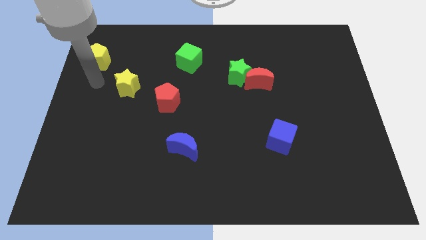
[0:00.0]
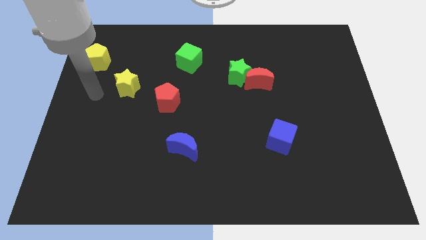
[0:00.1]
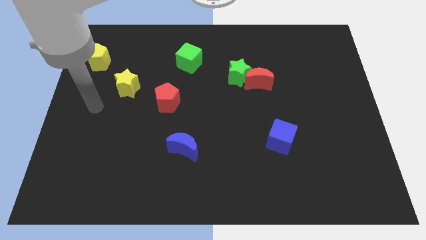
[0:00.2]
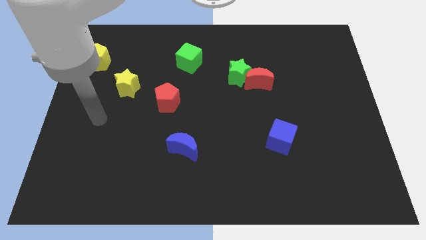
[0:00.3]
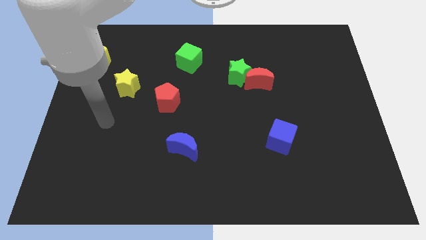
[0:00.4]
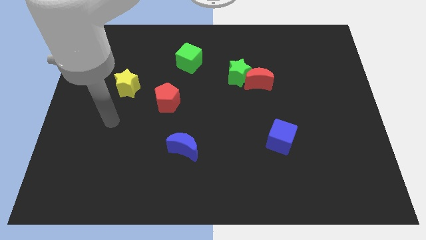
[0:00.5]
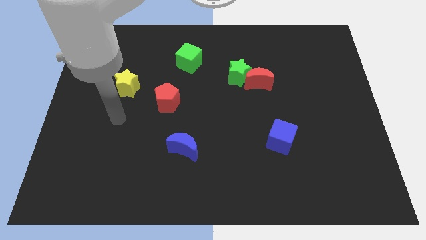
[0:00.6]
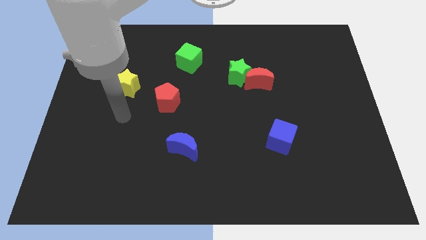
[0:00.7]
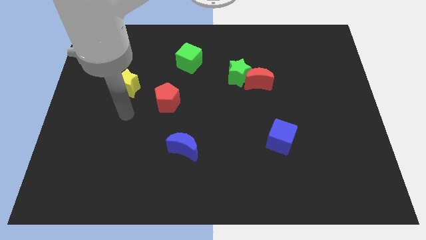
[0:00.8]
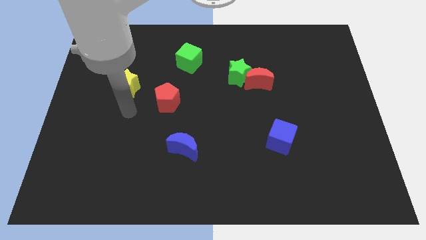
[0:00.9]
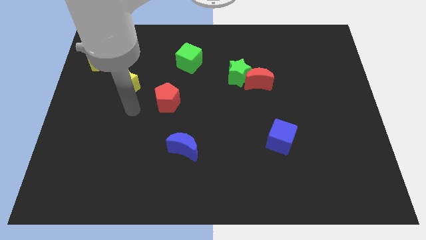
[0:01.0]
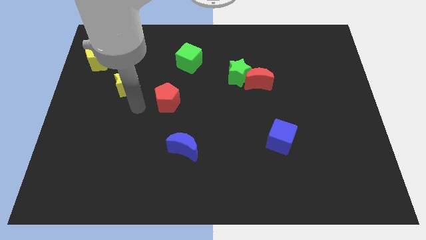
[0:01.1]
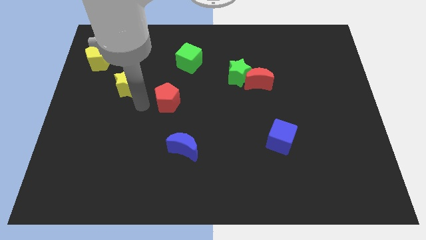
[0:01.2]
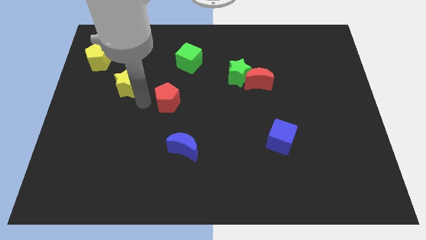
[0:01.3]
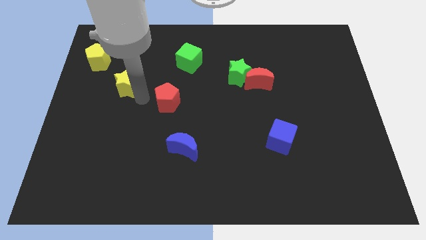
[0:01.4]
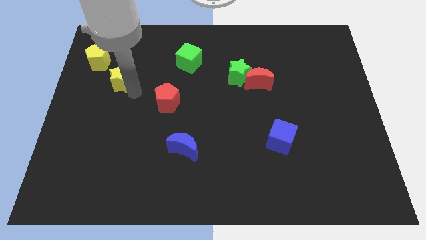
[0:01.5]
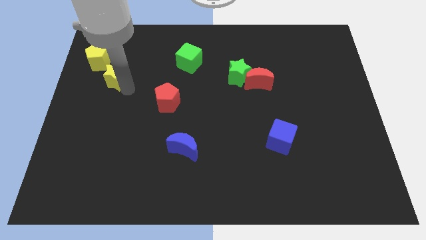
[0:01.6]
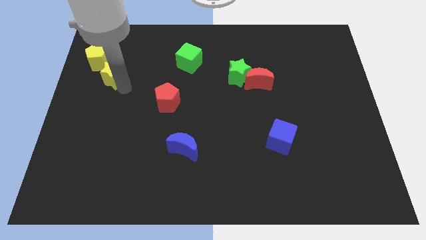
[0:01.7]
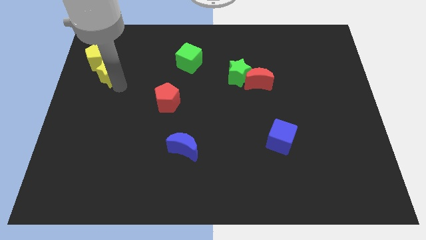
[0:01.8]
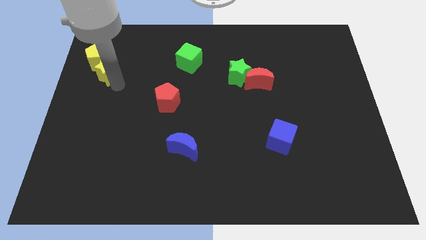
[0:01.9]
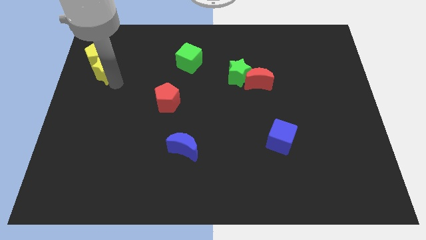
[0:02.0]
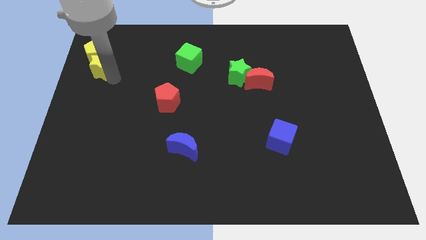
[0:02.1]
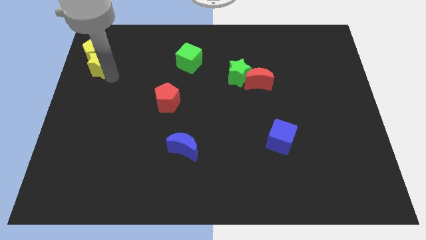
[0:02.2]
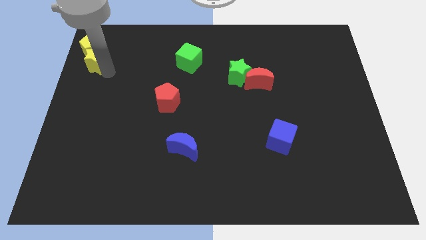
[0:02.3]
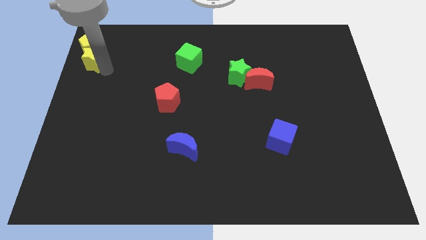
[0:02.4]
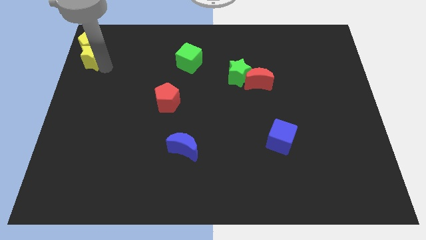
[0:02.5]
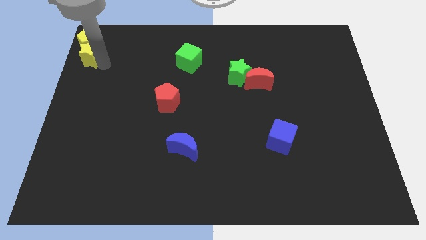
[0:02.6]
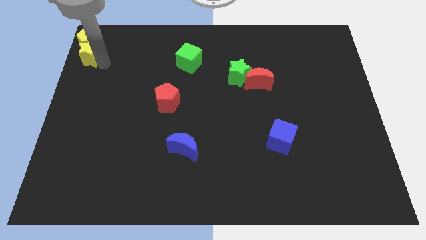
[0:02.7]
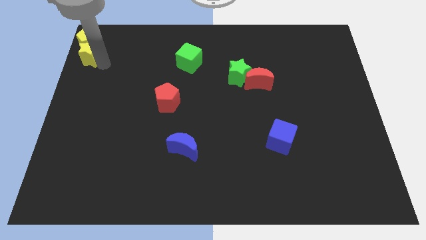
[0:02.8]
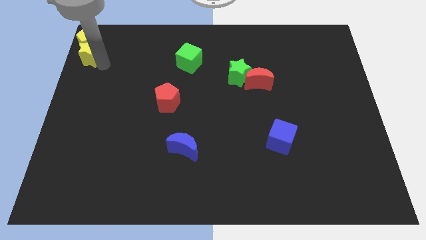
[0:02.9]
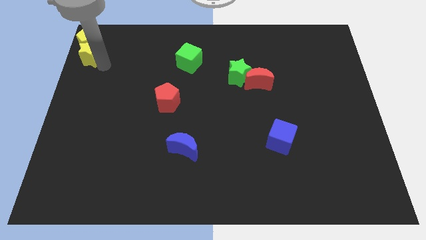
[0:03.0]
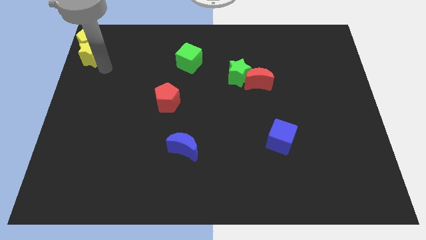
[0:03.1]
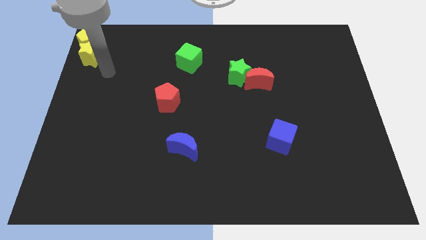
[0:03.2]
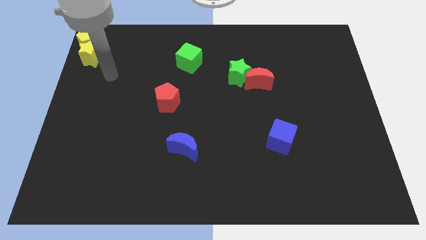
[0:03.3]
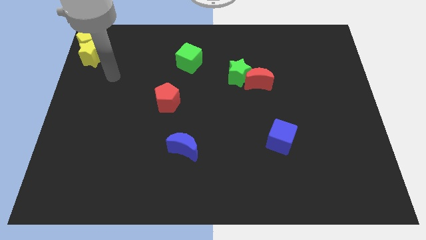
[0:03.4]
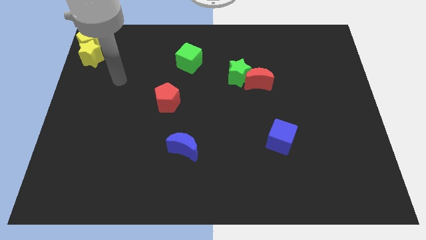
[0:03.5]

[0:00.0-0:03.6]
push the yellow blocks to the top left corner of the board

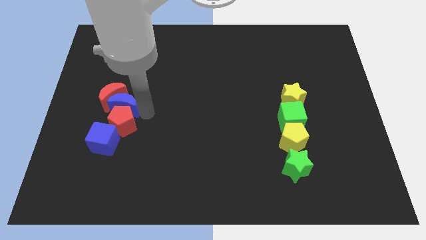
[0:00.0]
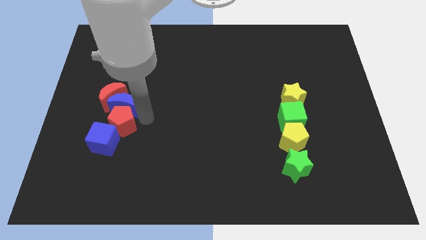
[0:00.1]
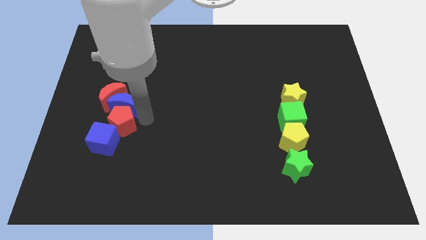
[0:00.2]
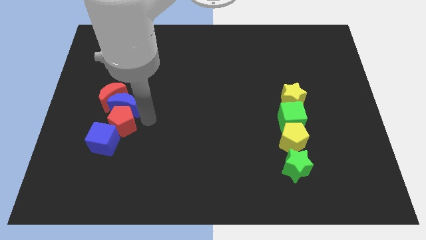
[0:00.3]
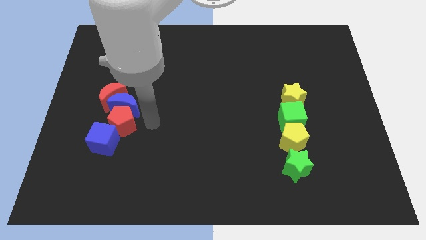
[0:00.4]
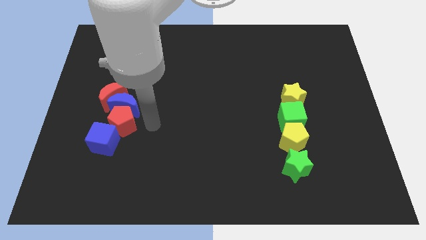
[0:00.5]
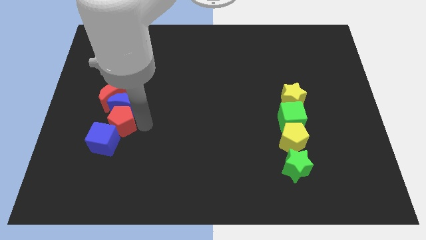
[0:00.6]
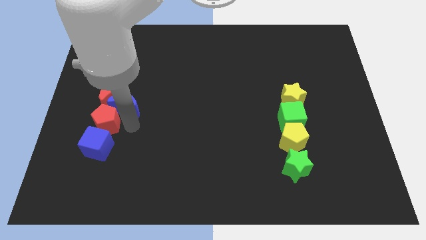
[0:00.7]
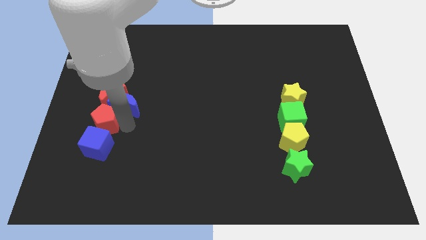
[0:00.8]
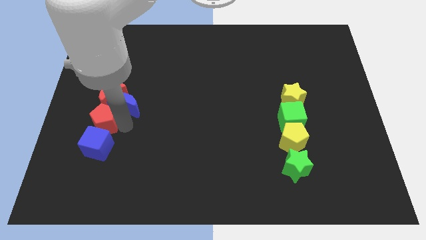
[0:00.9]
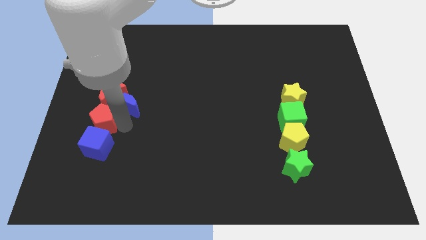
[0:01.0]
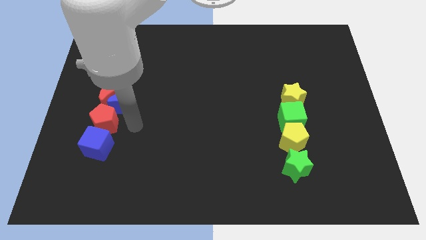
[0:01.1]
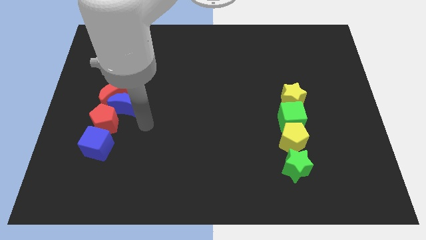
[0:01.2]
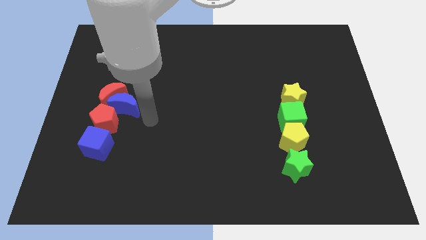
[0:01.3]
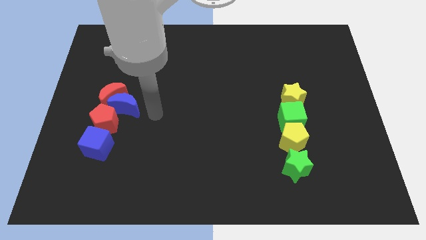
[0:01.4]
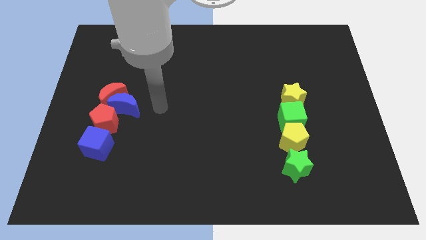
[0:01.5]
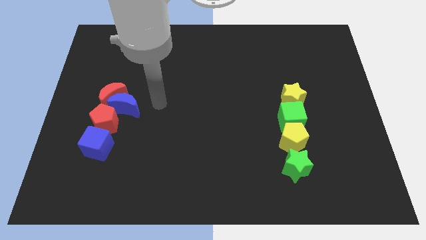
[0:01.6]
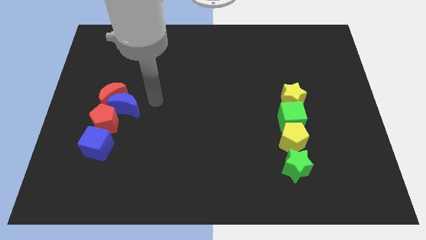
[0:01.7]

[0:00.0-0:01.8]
move the red pentagon to the top of the blue cube

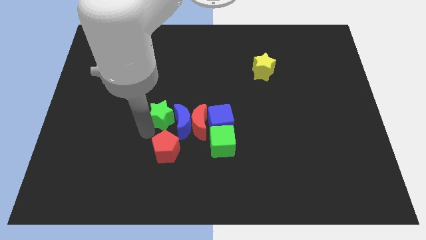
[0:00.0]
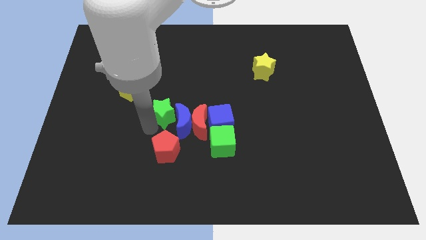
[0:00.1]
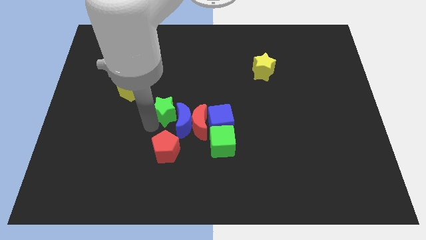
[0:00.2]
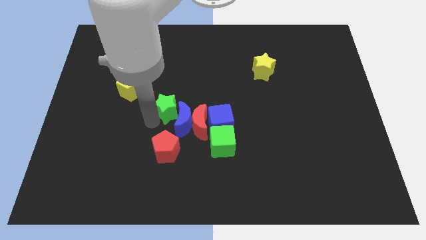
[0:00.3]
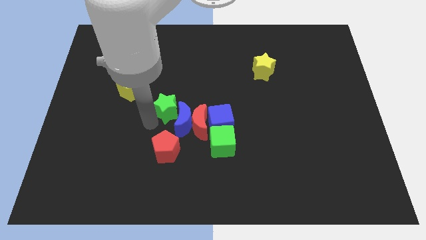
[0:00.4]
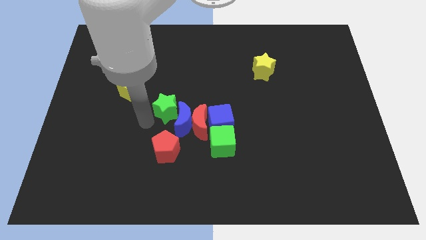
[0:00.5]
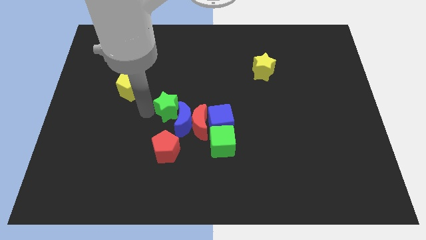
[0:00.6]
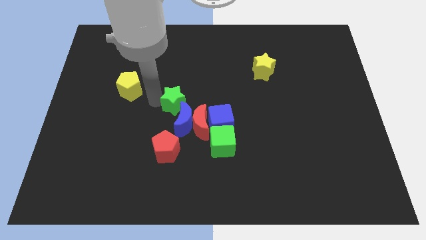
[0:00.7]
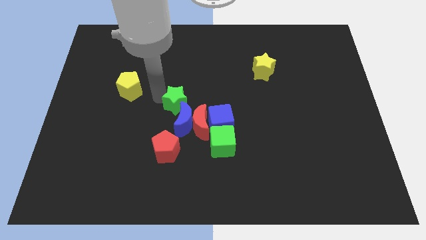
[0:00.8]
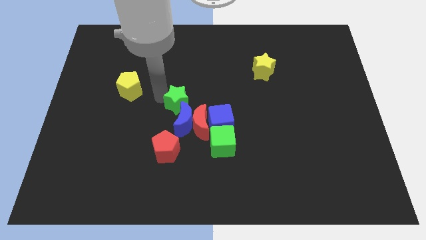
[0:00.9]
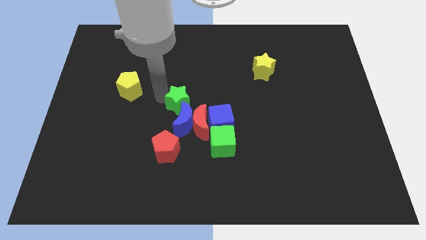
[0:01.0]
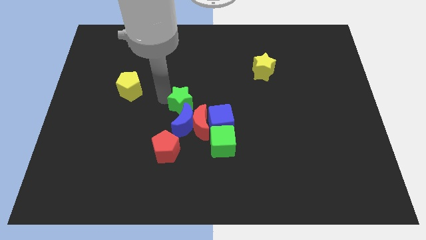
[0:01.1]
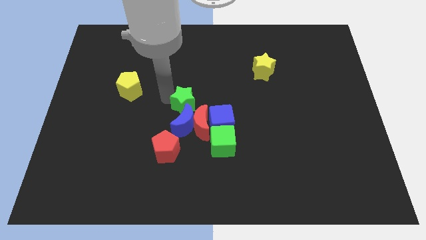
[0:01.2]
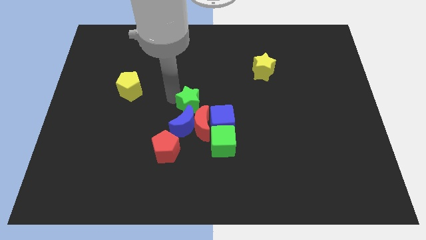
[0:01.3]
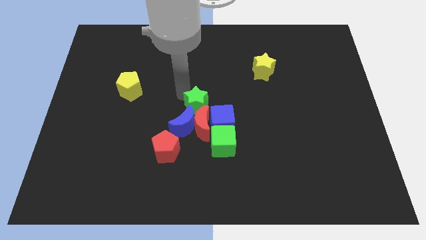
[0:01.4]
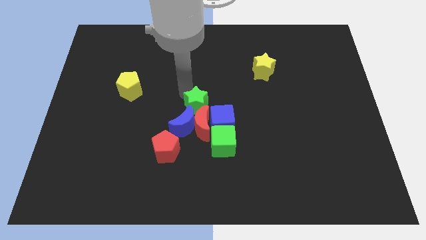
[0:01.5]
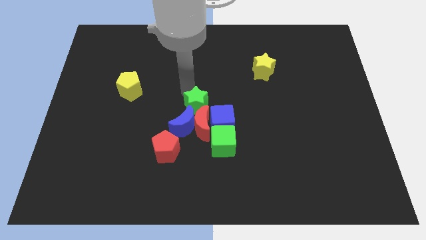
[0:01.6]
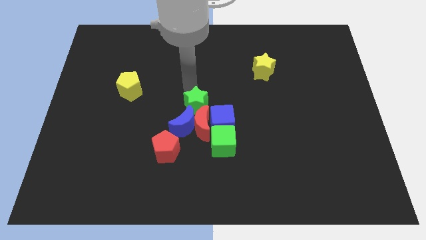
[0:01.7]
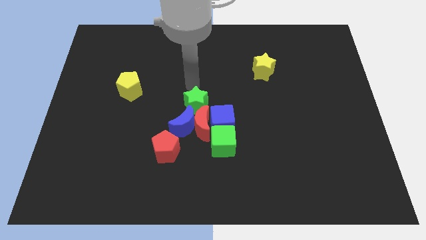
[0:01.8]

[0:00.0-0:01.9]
place the green star to the center of the board

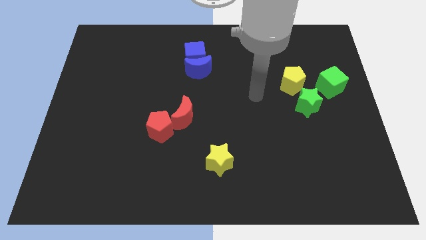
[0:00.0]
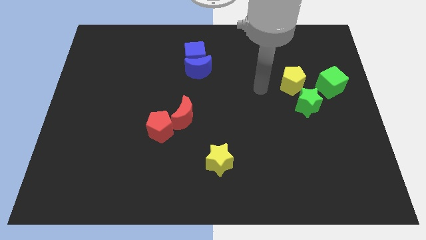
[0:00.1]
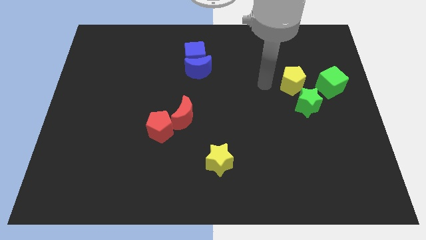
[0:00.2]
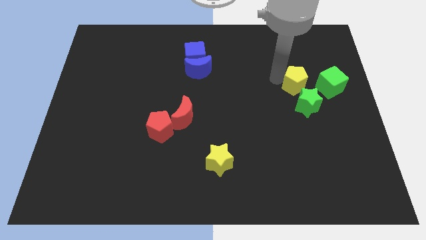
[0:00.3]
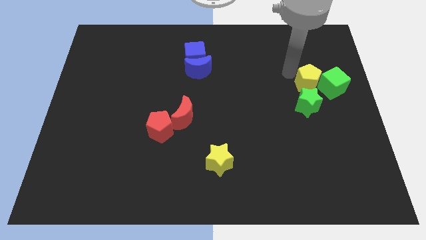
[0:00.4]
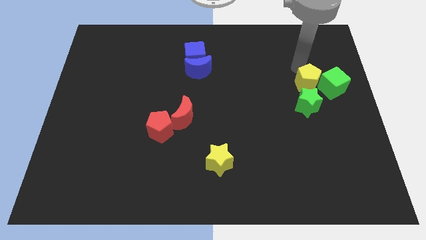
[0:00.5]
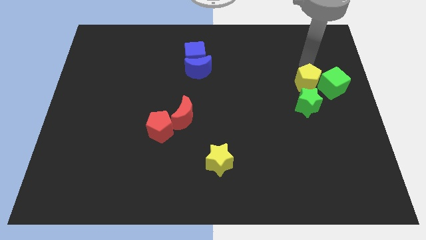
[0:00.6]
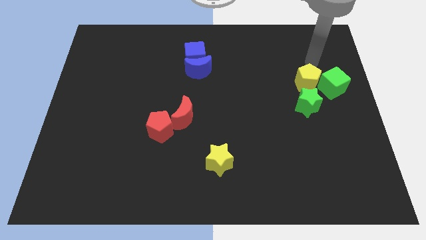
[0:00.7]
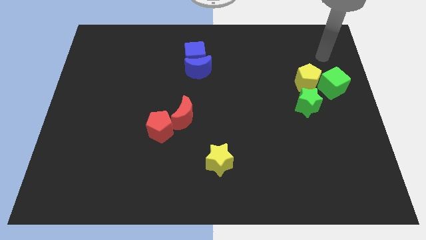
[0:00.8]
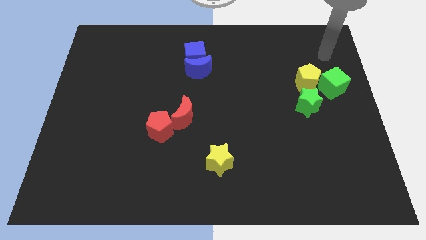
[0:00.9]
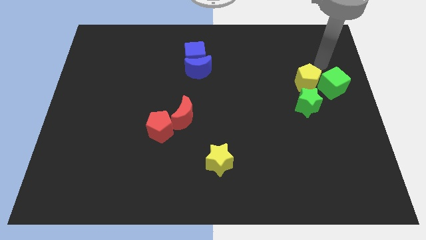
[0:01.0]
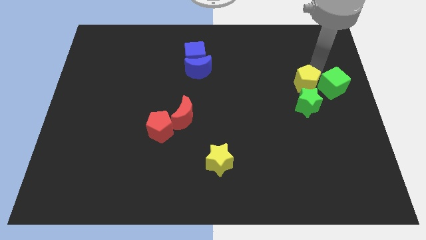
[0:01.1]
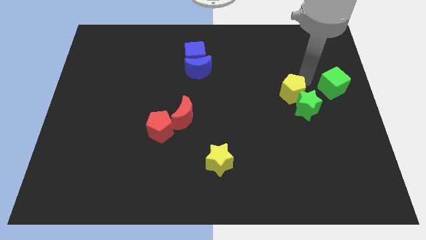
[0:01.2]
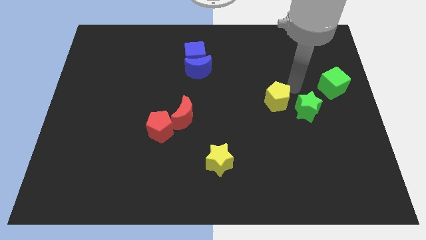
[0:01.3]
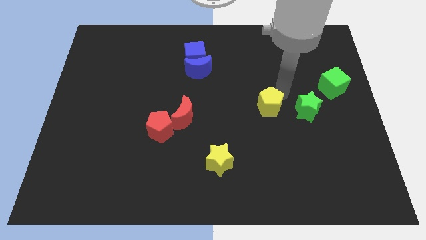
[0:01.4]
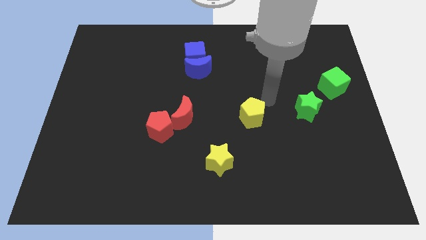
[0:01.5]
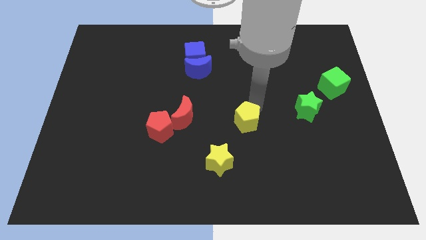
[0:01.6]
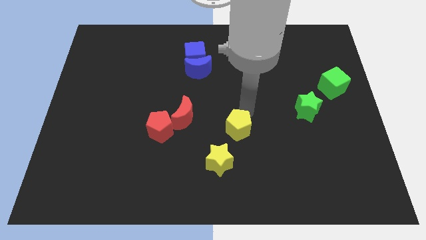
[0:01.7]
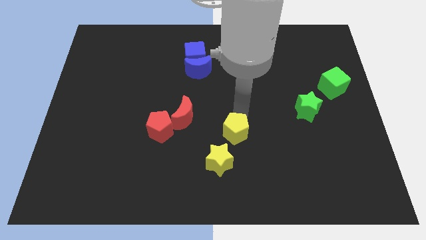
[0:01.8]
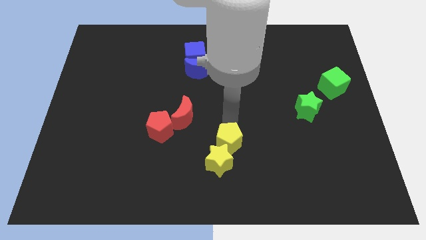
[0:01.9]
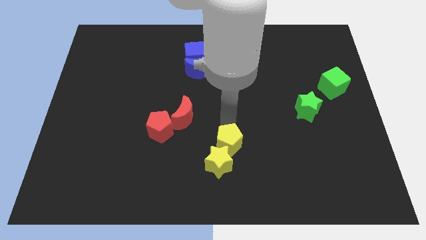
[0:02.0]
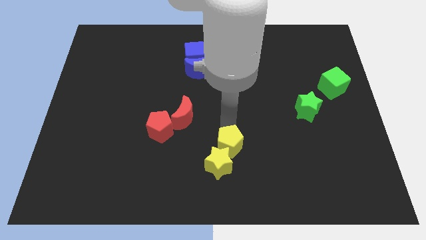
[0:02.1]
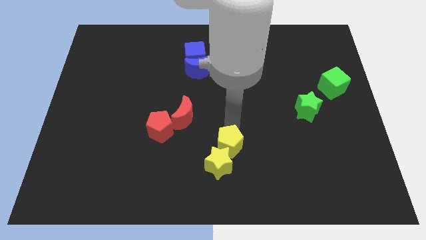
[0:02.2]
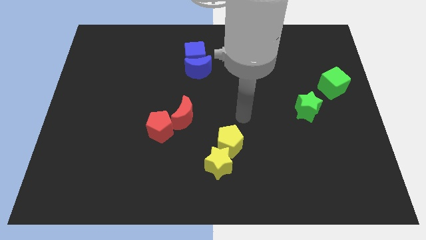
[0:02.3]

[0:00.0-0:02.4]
place yellow pentagon above yellow star
